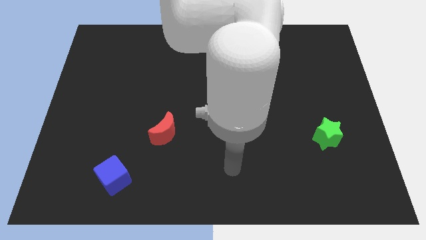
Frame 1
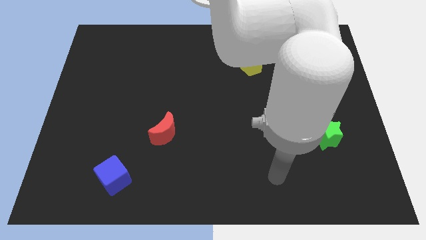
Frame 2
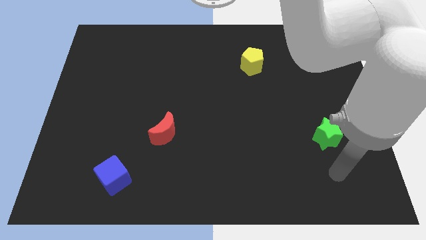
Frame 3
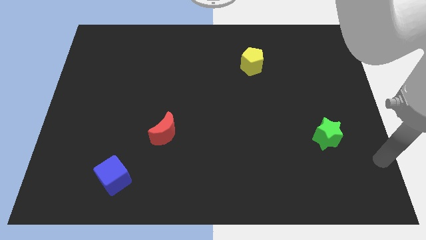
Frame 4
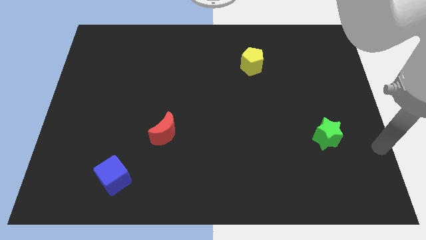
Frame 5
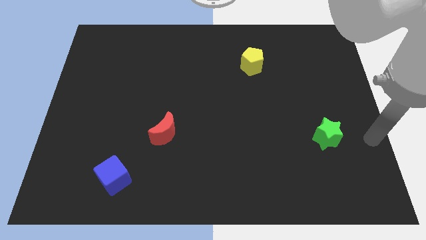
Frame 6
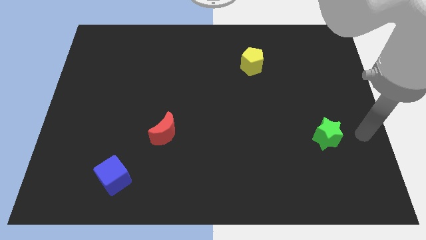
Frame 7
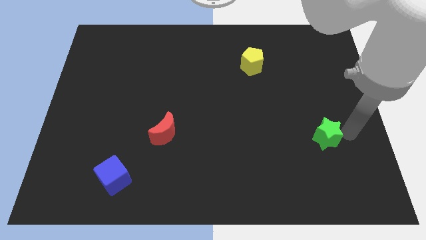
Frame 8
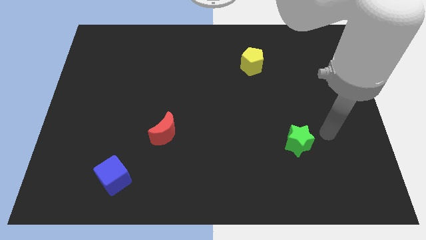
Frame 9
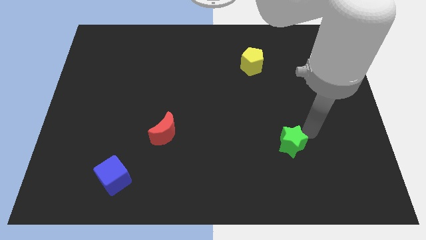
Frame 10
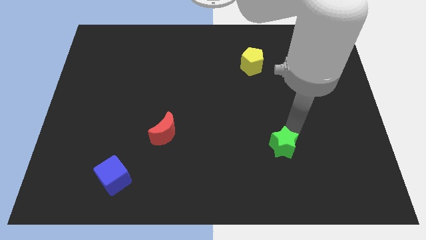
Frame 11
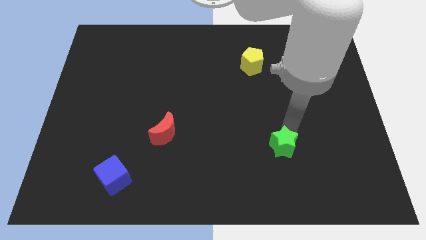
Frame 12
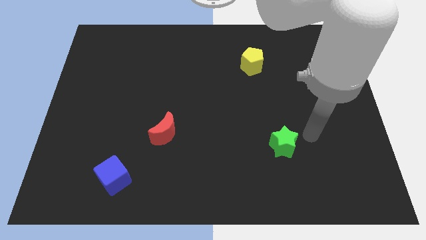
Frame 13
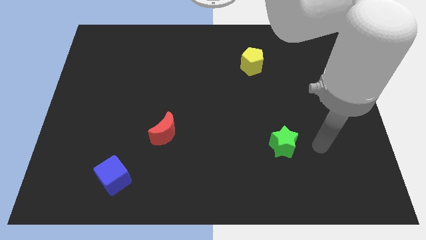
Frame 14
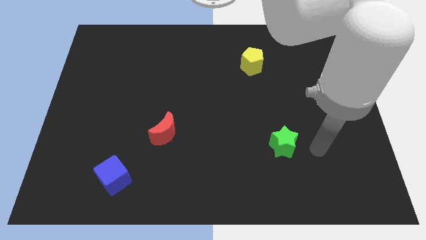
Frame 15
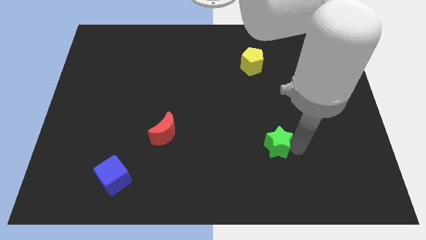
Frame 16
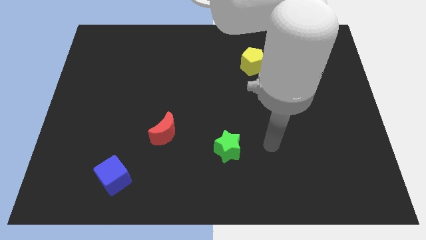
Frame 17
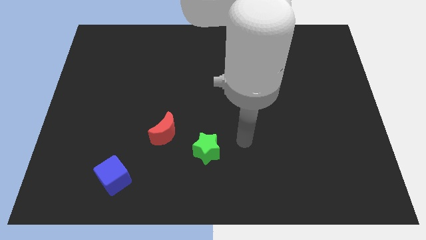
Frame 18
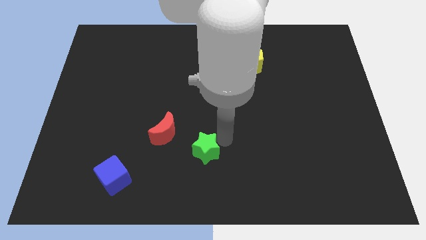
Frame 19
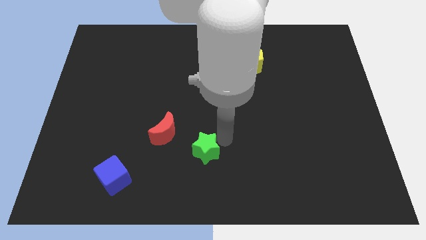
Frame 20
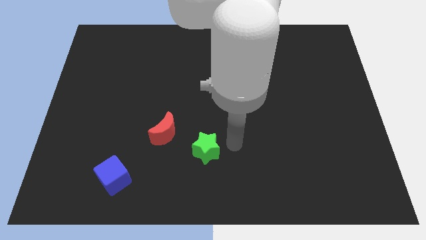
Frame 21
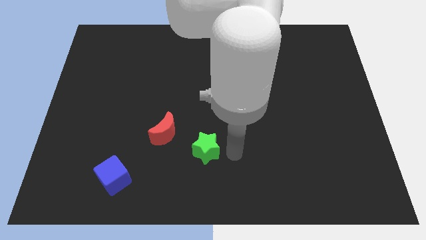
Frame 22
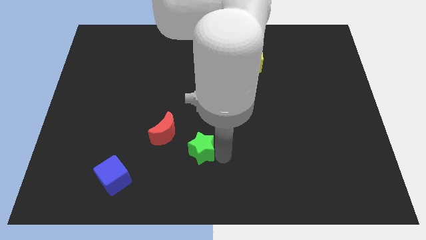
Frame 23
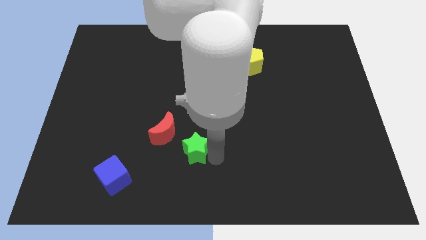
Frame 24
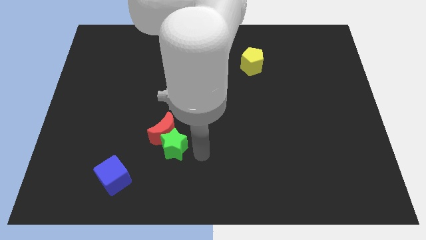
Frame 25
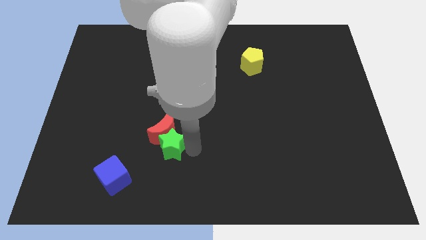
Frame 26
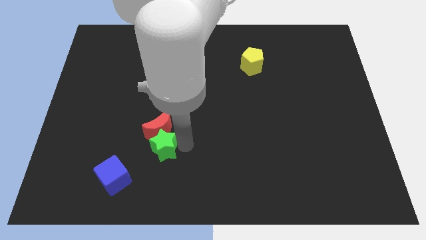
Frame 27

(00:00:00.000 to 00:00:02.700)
slide the green star towards the red block

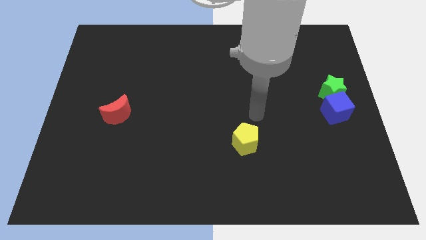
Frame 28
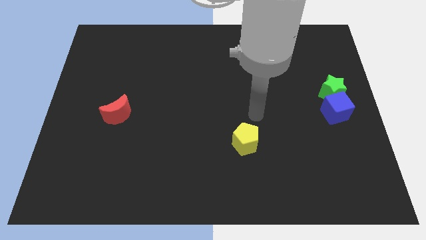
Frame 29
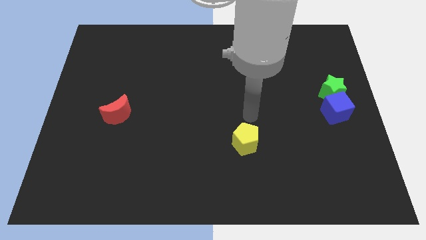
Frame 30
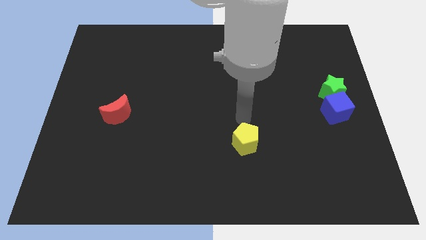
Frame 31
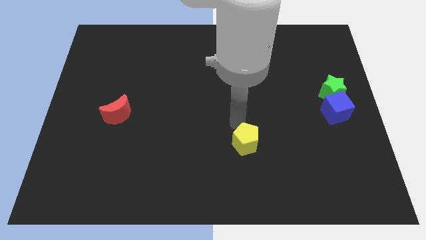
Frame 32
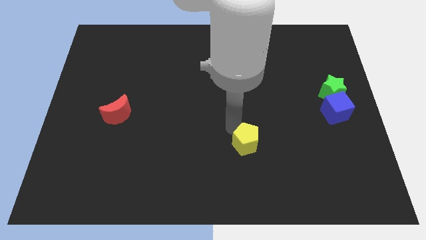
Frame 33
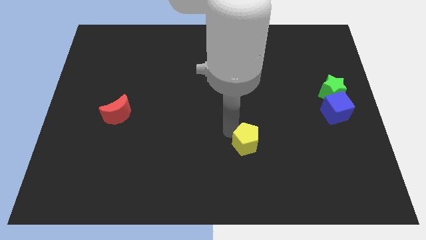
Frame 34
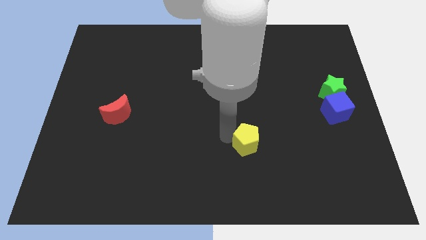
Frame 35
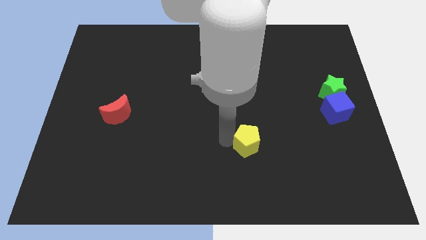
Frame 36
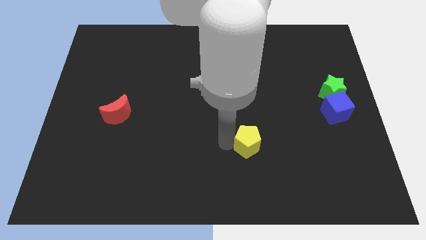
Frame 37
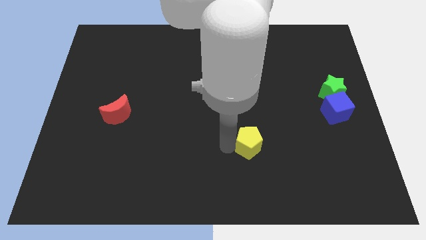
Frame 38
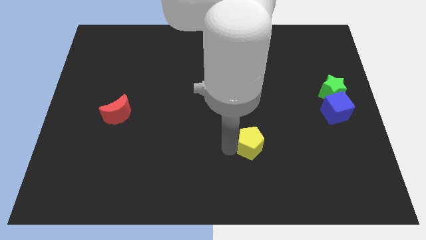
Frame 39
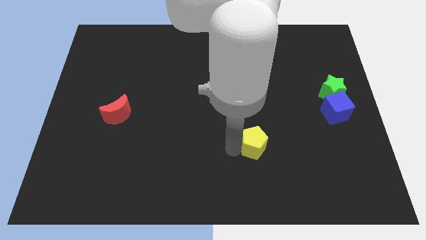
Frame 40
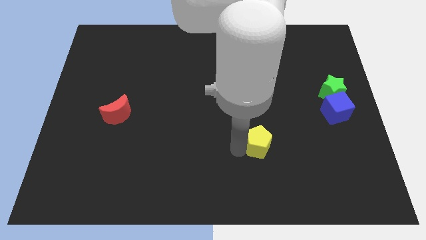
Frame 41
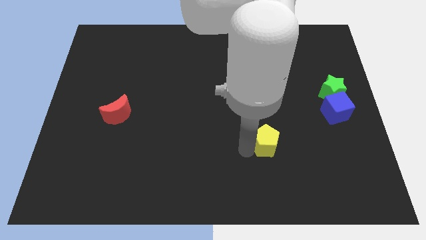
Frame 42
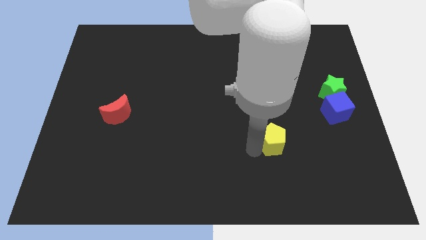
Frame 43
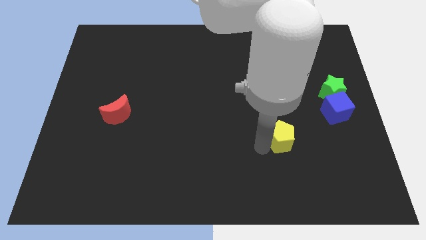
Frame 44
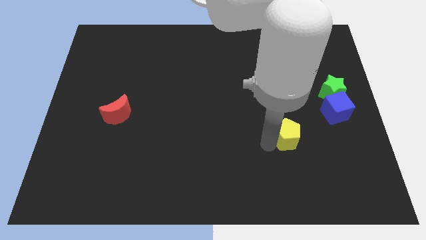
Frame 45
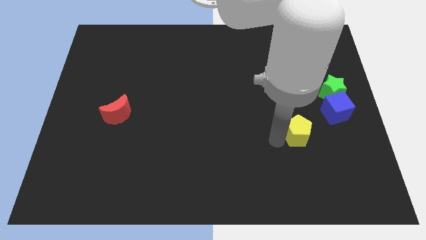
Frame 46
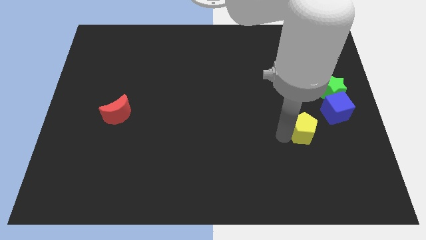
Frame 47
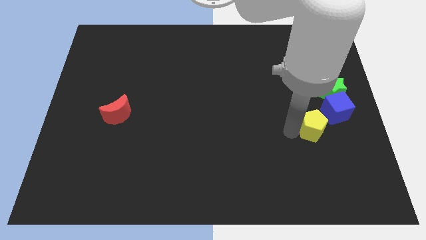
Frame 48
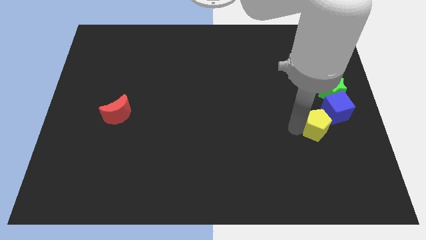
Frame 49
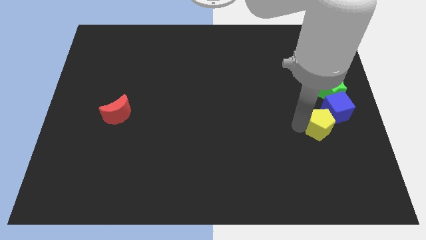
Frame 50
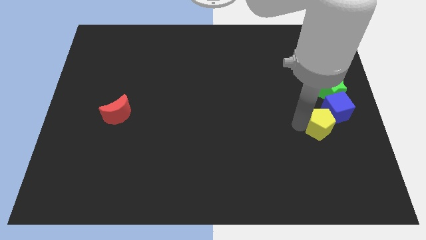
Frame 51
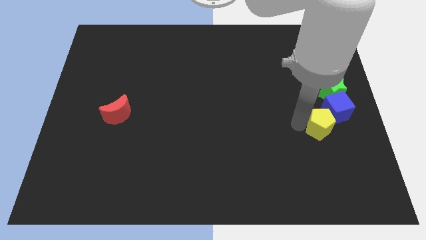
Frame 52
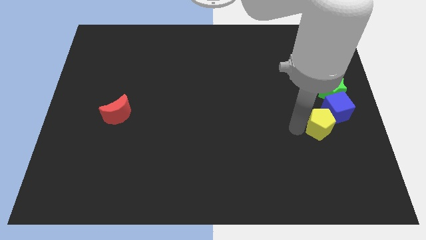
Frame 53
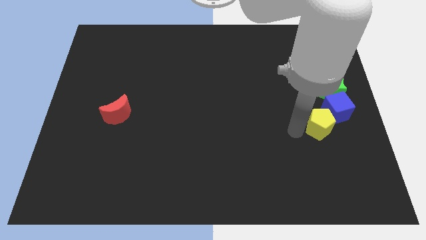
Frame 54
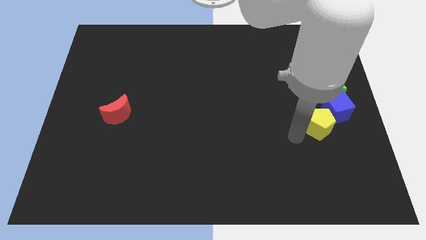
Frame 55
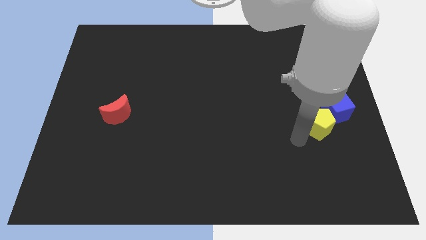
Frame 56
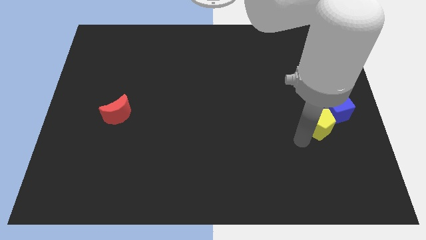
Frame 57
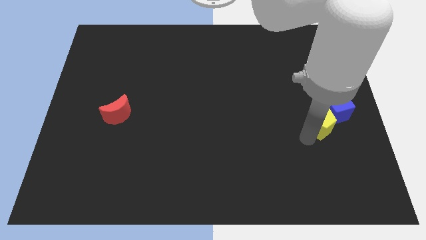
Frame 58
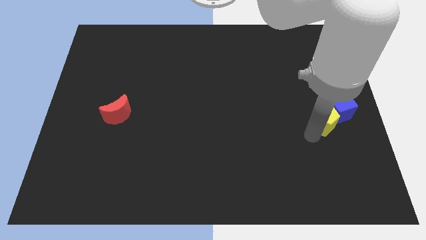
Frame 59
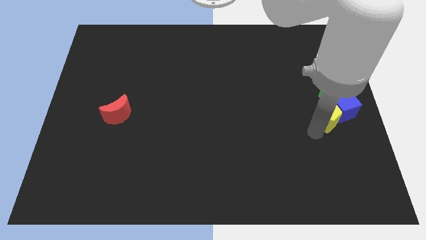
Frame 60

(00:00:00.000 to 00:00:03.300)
push the yellow block to the blue block

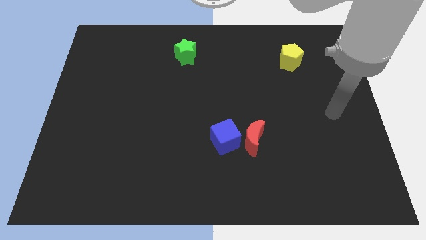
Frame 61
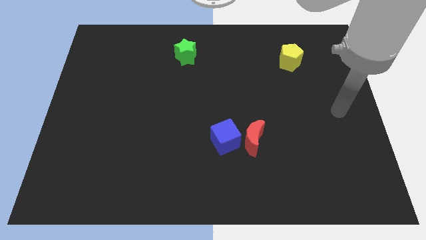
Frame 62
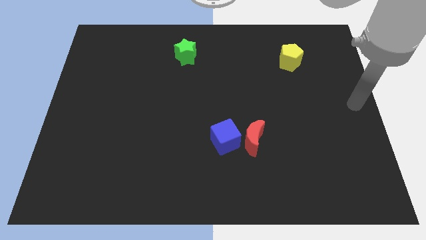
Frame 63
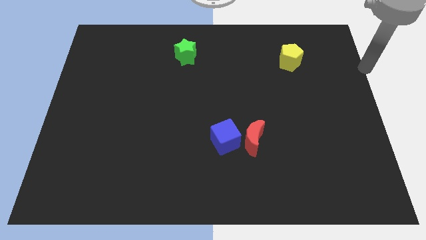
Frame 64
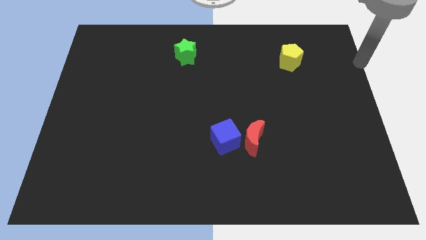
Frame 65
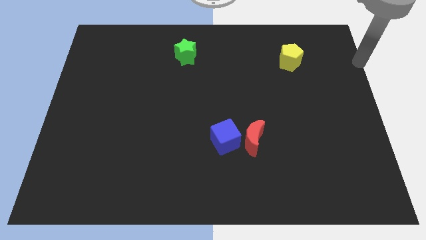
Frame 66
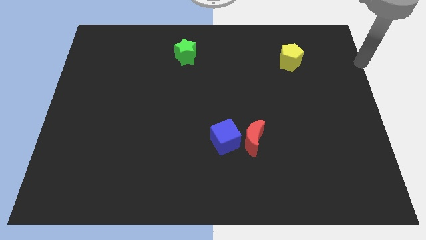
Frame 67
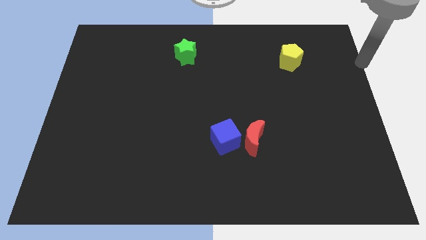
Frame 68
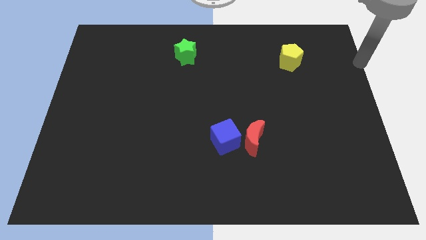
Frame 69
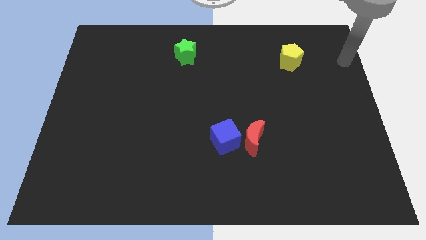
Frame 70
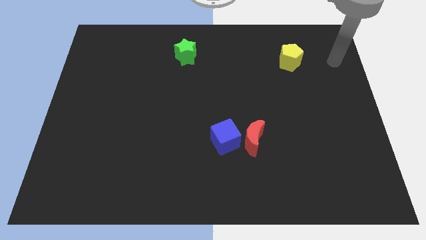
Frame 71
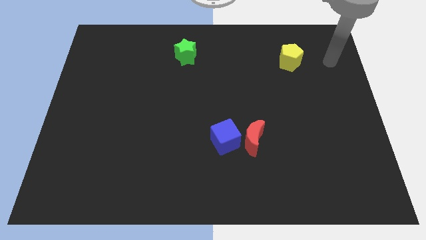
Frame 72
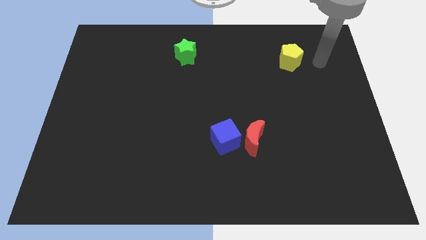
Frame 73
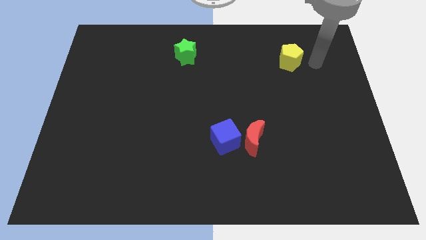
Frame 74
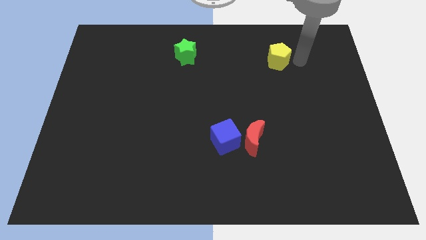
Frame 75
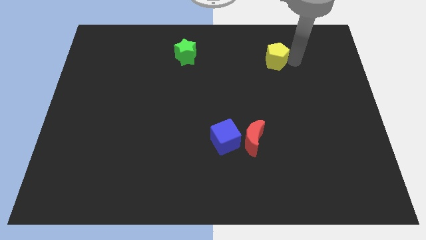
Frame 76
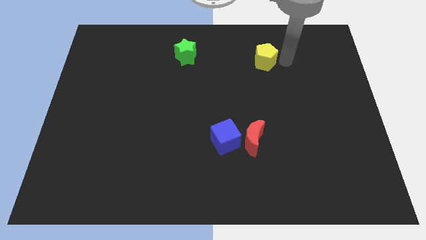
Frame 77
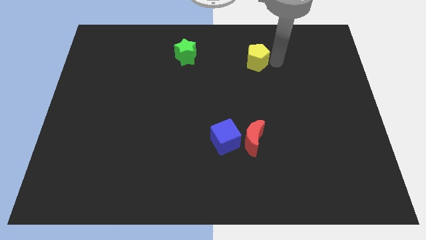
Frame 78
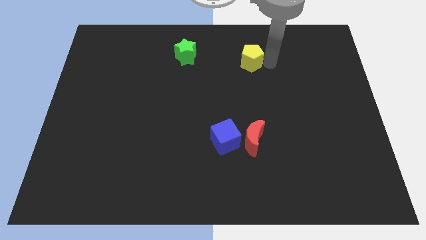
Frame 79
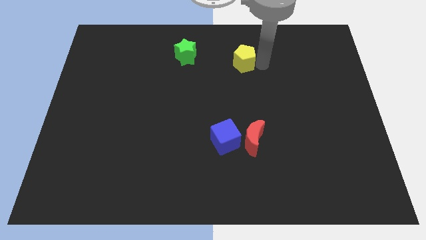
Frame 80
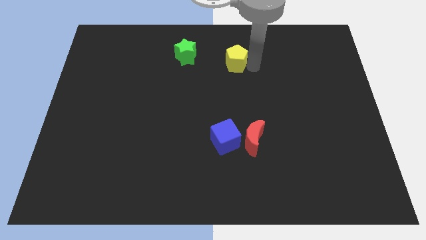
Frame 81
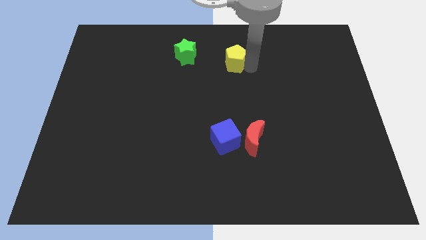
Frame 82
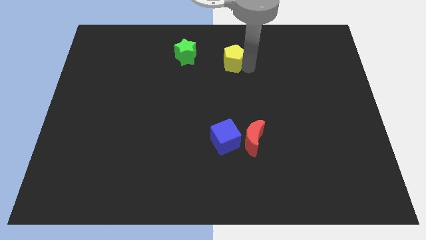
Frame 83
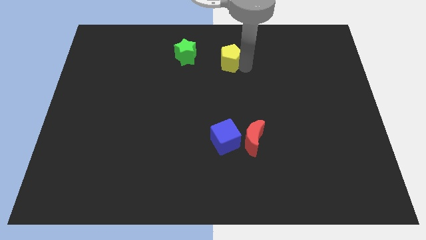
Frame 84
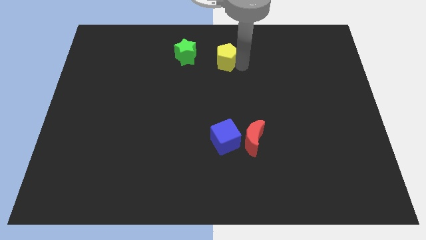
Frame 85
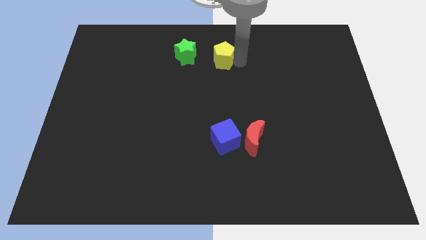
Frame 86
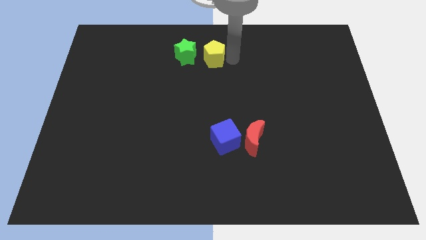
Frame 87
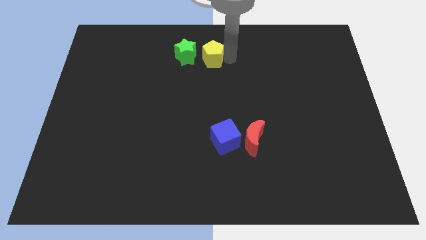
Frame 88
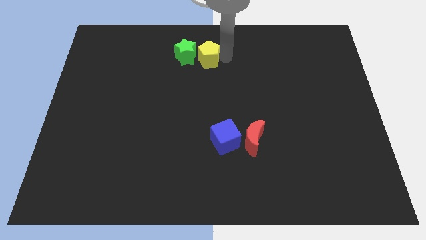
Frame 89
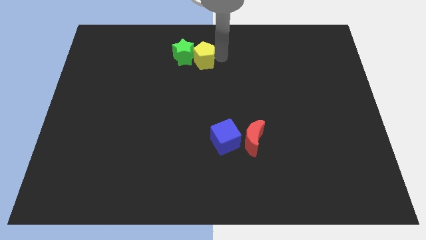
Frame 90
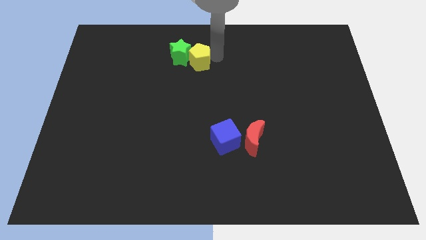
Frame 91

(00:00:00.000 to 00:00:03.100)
put the yellow block towards the green star
